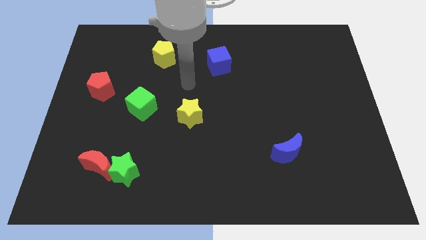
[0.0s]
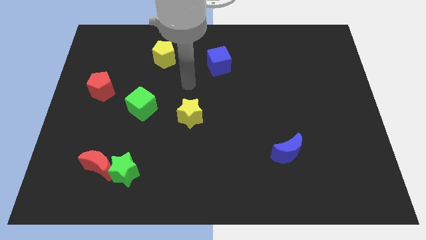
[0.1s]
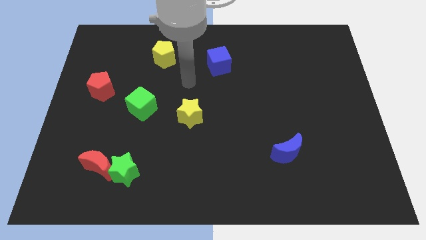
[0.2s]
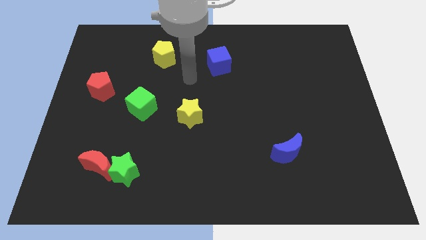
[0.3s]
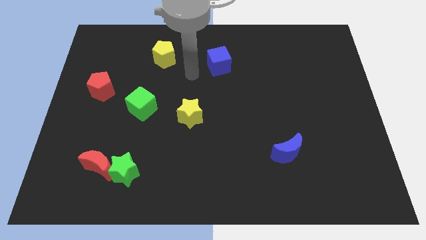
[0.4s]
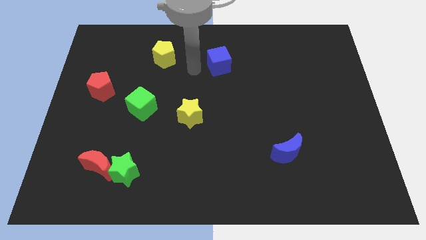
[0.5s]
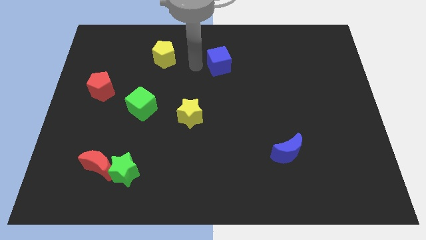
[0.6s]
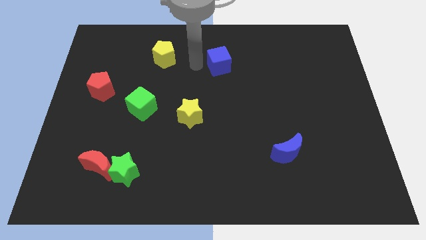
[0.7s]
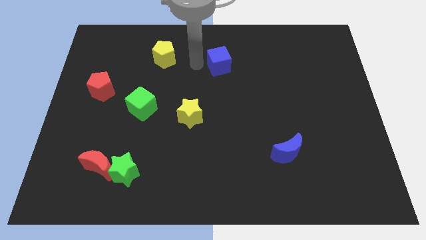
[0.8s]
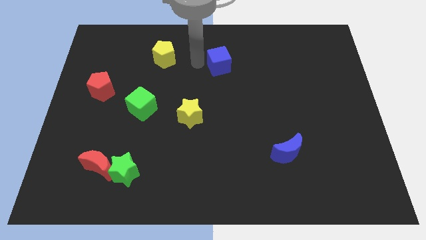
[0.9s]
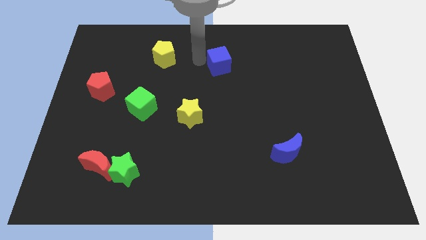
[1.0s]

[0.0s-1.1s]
move your arm close to the blue cube

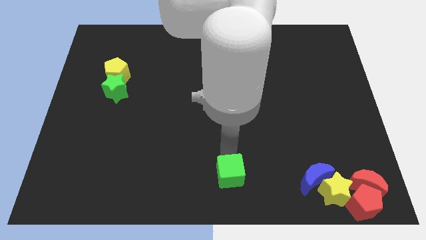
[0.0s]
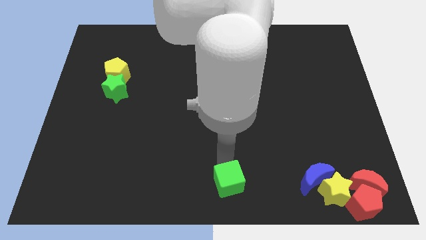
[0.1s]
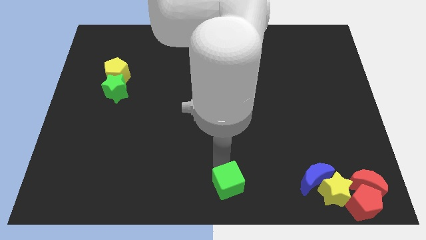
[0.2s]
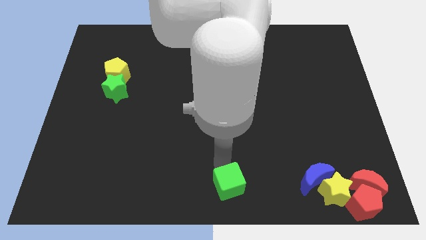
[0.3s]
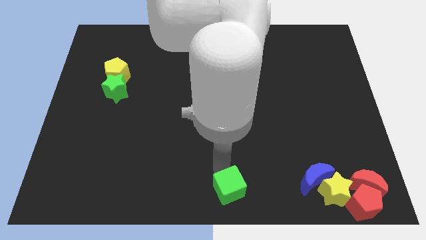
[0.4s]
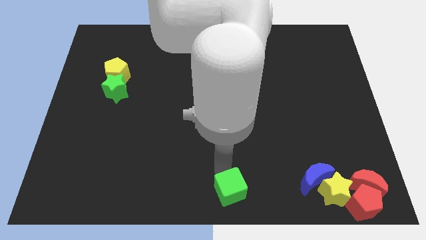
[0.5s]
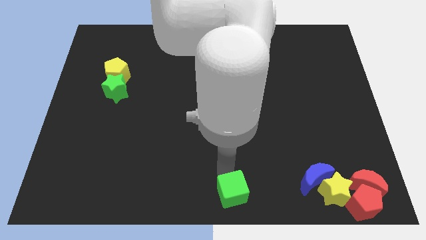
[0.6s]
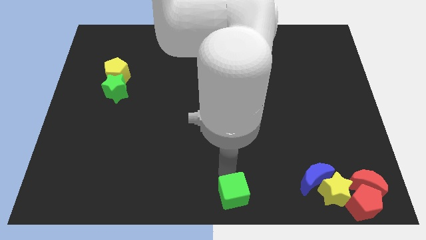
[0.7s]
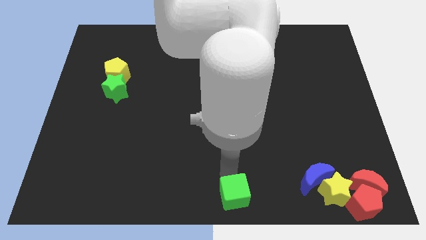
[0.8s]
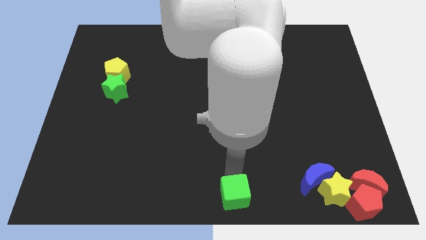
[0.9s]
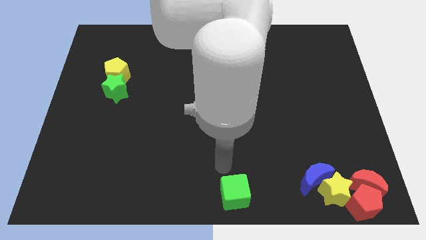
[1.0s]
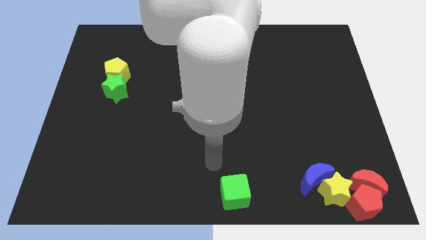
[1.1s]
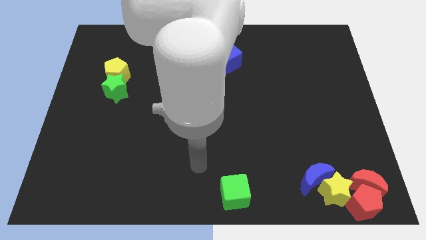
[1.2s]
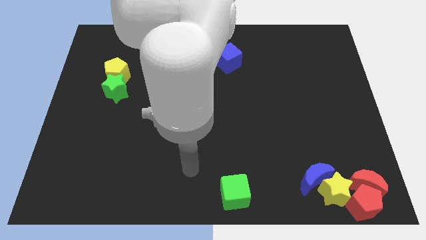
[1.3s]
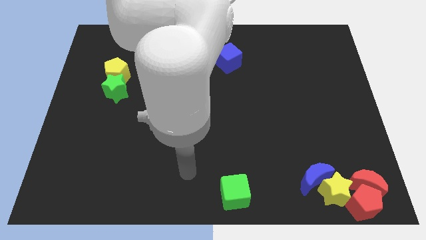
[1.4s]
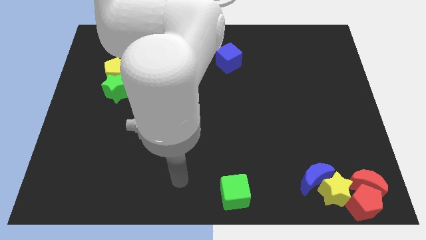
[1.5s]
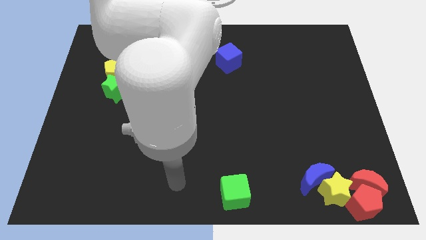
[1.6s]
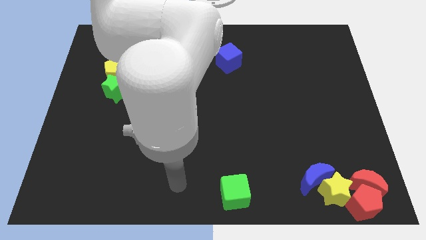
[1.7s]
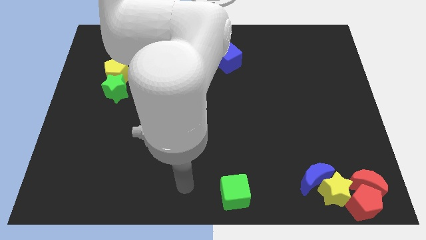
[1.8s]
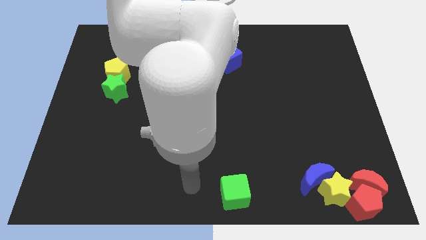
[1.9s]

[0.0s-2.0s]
sligtly push the green cube downward

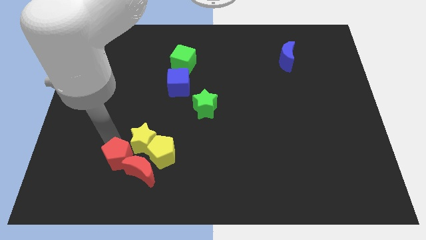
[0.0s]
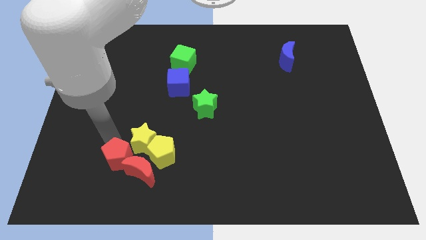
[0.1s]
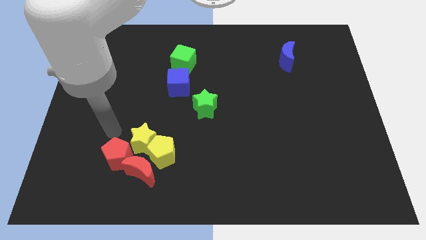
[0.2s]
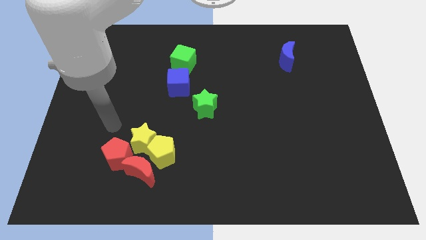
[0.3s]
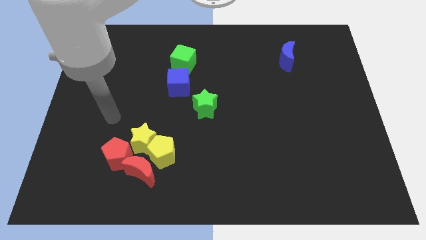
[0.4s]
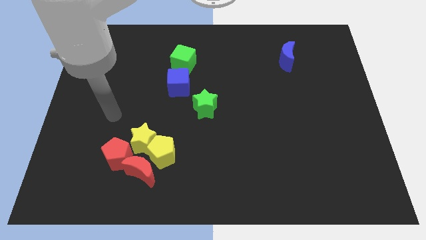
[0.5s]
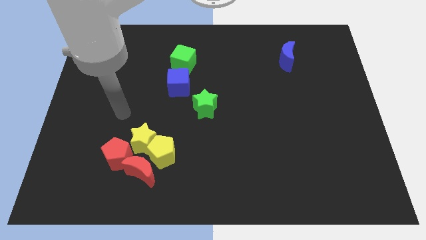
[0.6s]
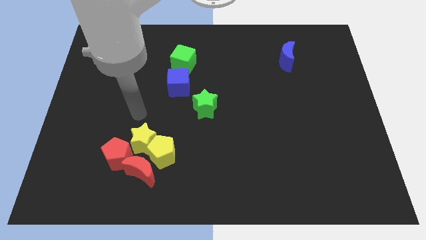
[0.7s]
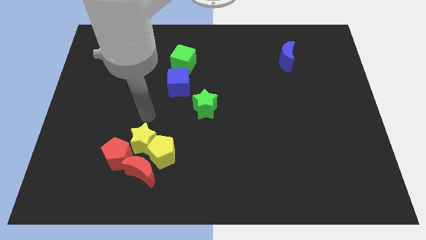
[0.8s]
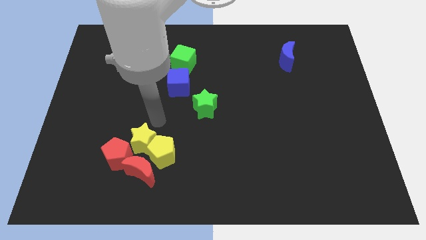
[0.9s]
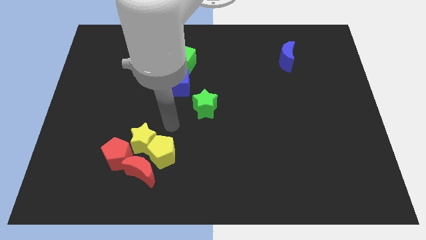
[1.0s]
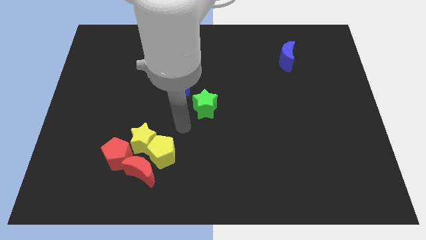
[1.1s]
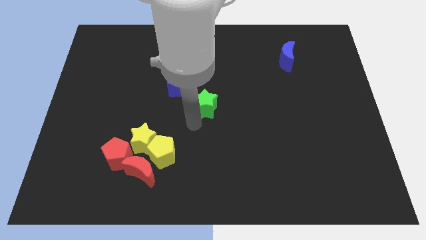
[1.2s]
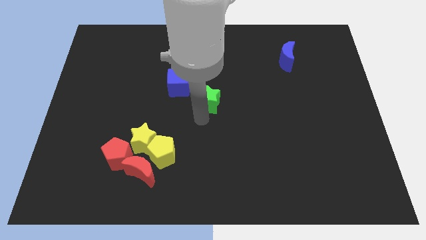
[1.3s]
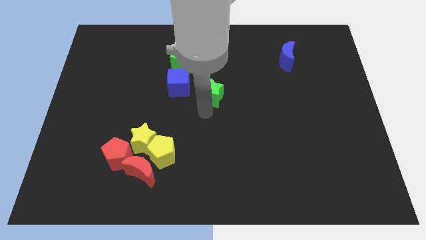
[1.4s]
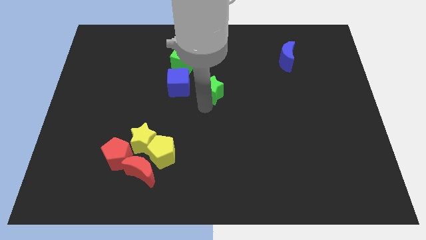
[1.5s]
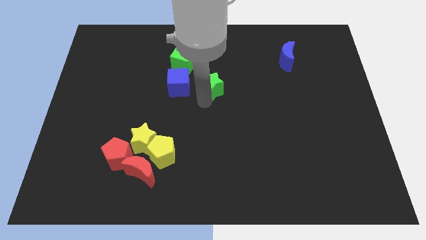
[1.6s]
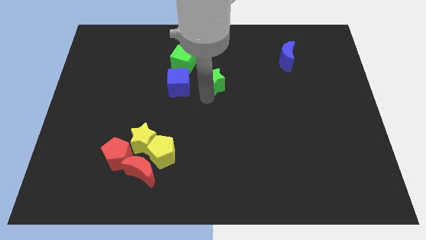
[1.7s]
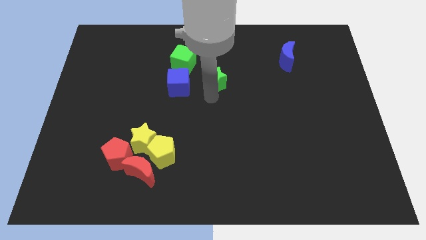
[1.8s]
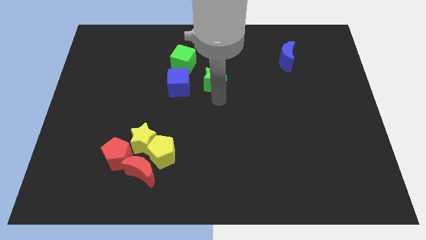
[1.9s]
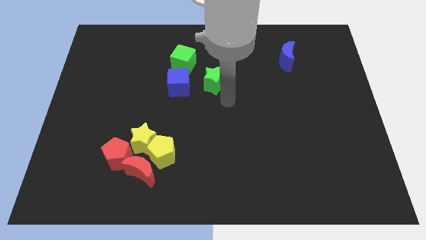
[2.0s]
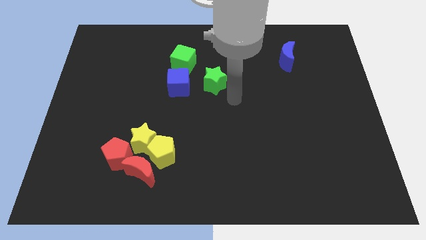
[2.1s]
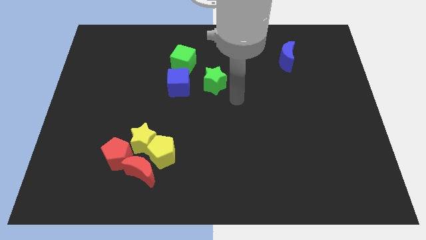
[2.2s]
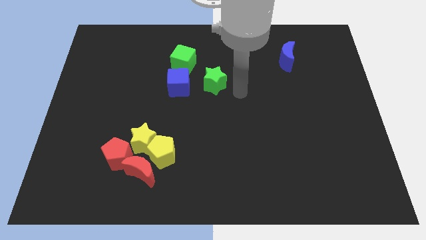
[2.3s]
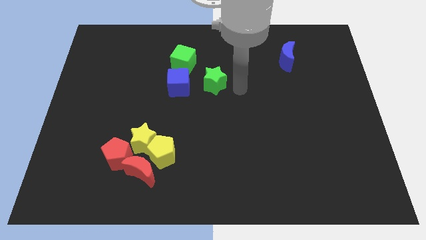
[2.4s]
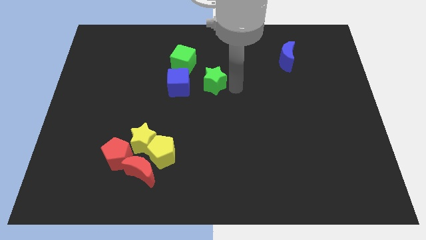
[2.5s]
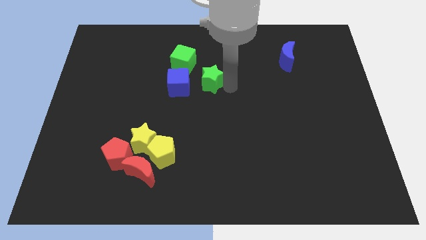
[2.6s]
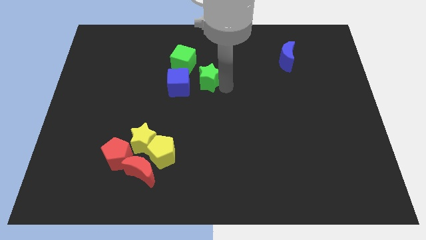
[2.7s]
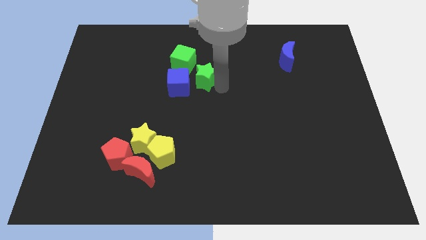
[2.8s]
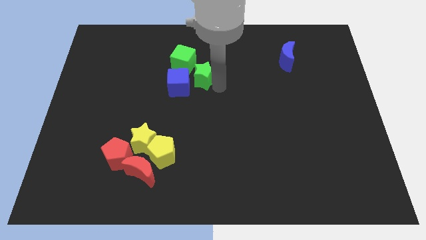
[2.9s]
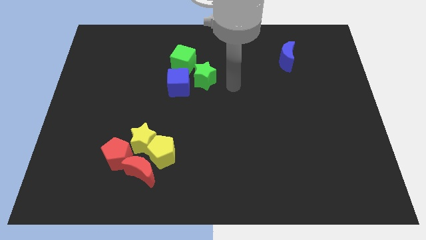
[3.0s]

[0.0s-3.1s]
slide the green star towards the right side of the group of blocks

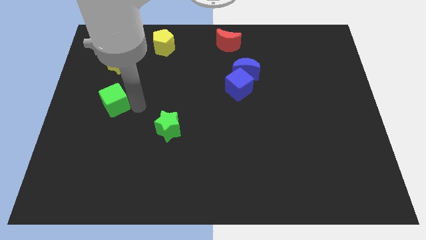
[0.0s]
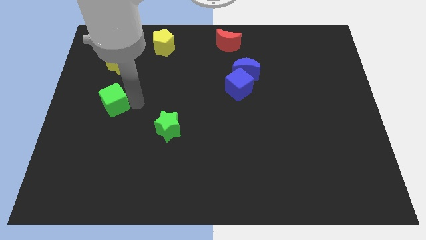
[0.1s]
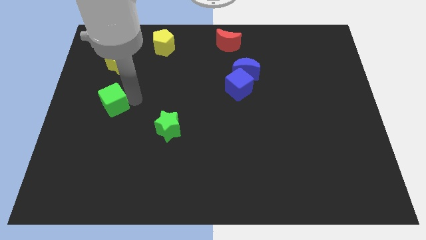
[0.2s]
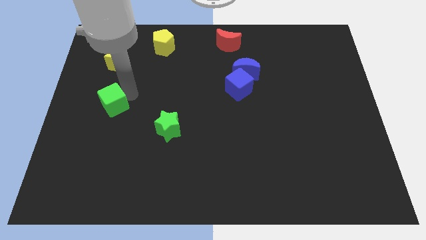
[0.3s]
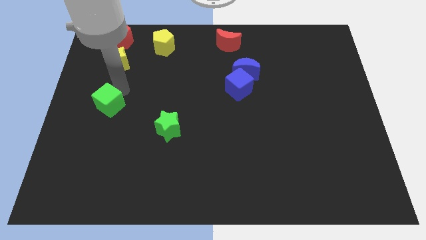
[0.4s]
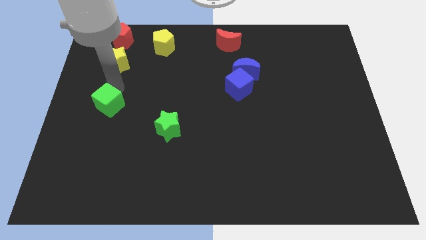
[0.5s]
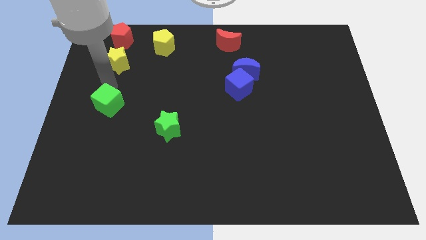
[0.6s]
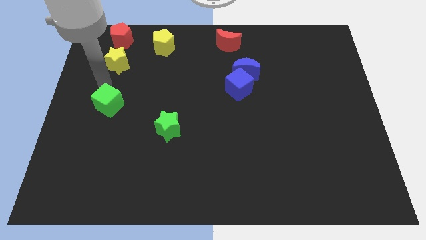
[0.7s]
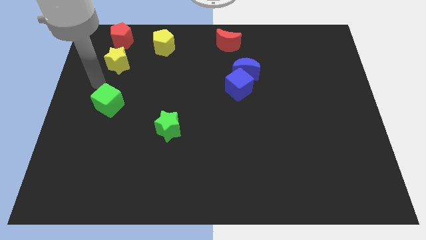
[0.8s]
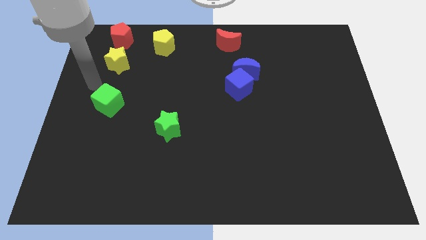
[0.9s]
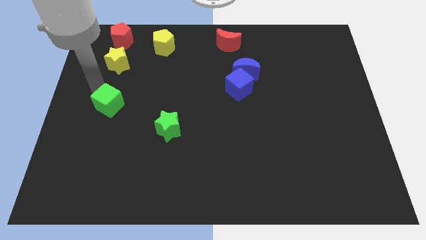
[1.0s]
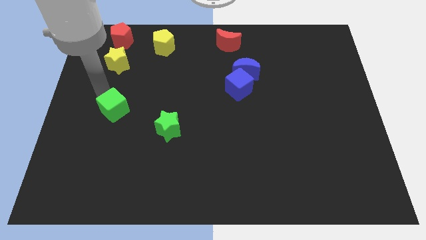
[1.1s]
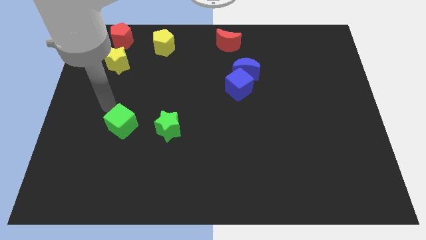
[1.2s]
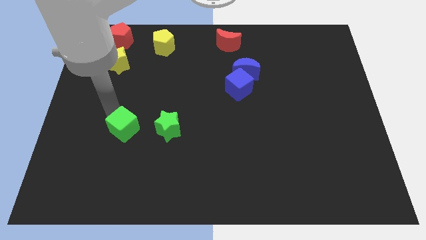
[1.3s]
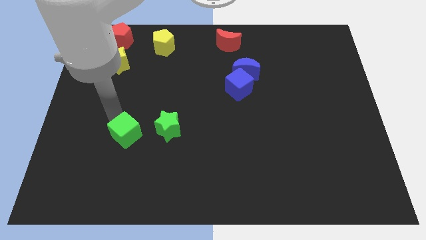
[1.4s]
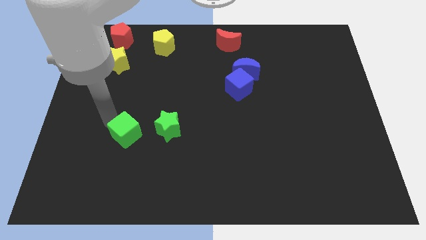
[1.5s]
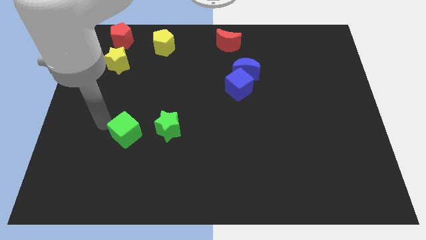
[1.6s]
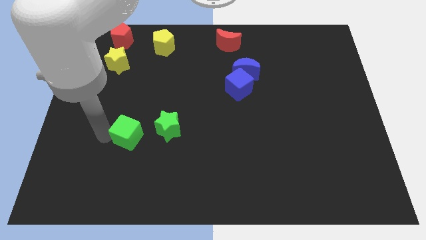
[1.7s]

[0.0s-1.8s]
move the green cube left beside the green star

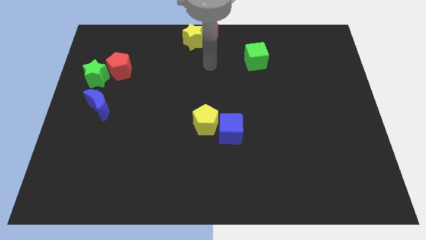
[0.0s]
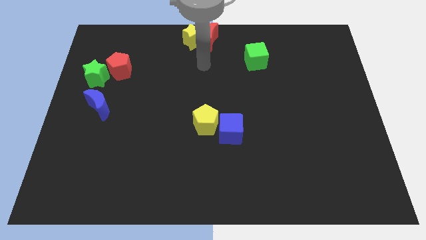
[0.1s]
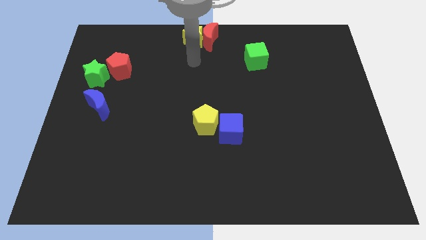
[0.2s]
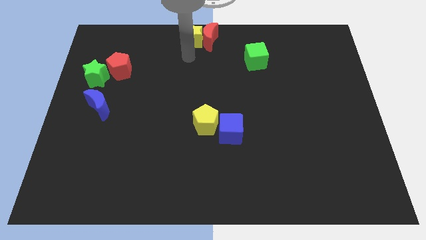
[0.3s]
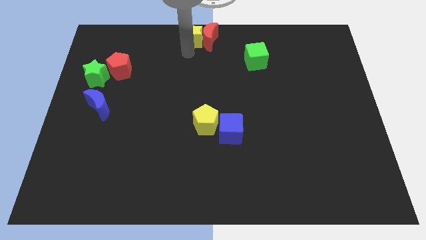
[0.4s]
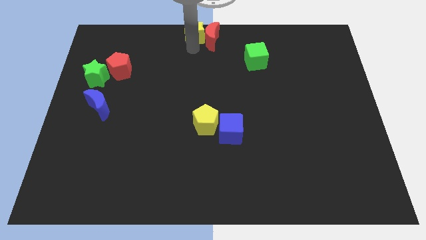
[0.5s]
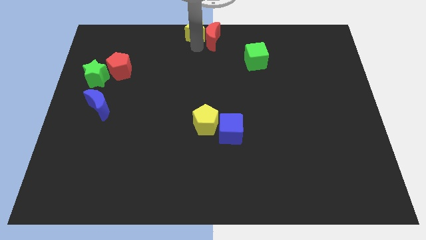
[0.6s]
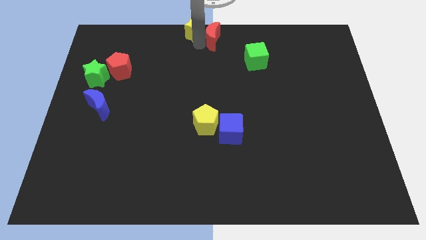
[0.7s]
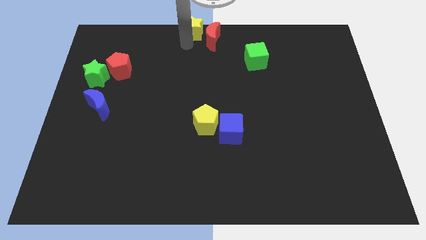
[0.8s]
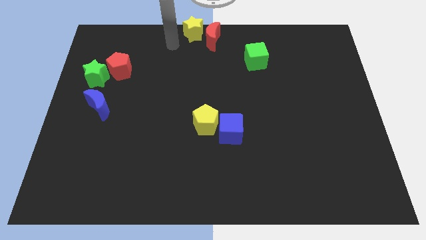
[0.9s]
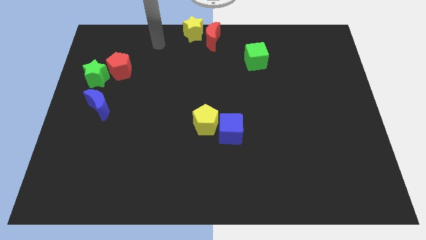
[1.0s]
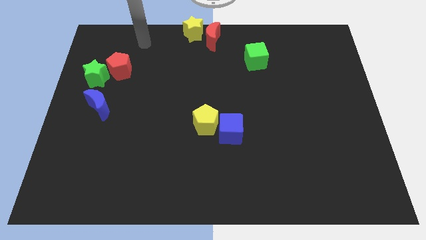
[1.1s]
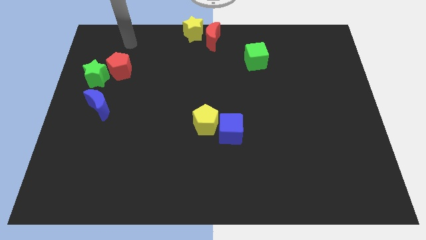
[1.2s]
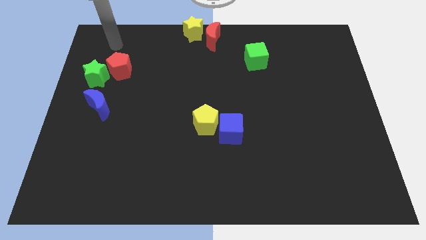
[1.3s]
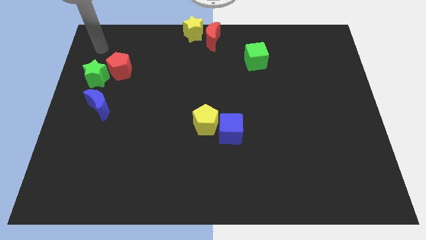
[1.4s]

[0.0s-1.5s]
push the yellow star to the top side
